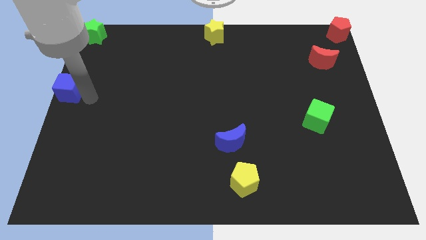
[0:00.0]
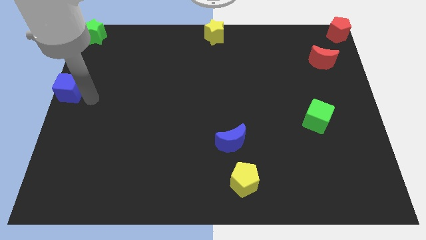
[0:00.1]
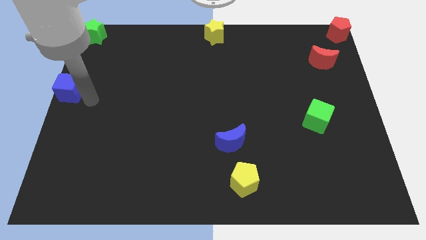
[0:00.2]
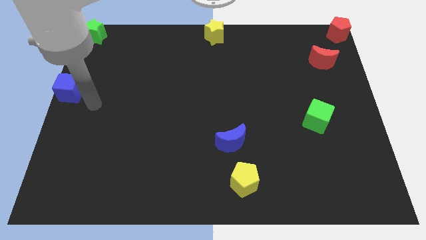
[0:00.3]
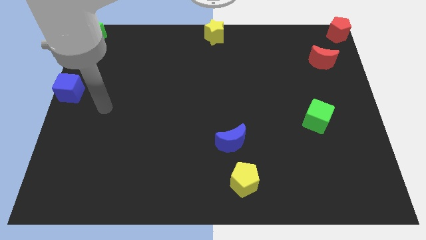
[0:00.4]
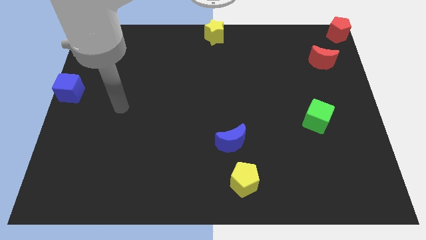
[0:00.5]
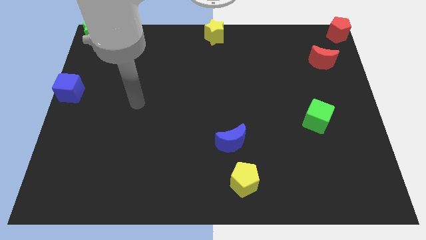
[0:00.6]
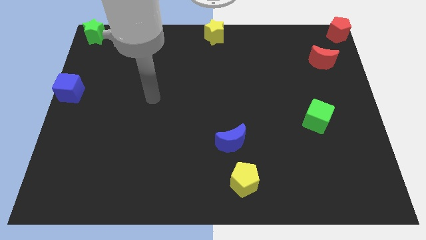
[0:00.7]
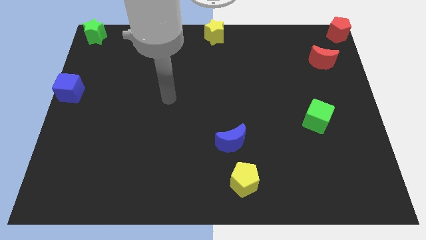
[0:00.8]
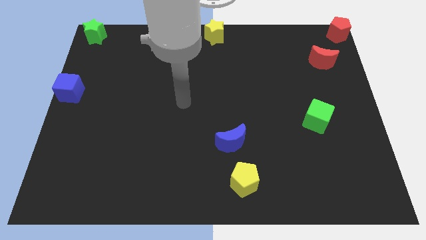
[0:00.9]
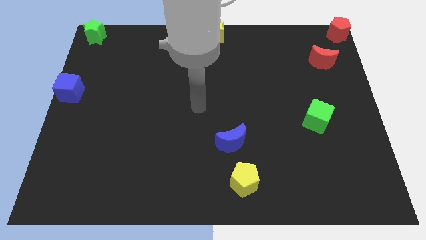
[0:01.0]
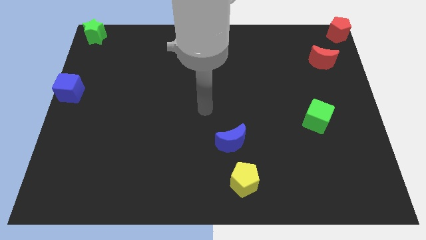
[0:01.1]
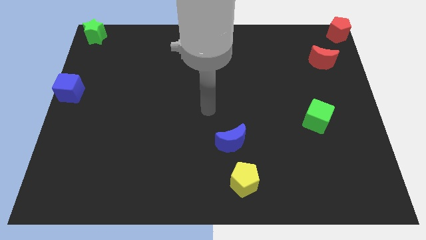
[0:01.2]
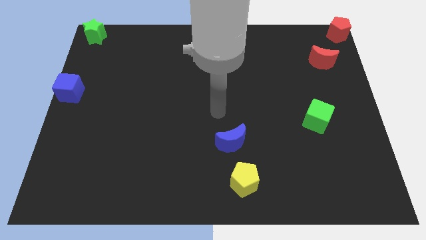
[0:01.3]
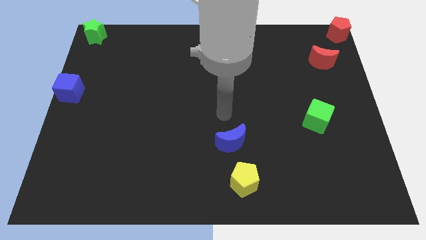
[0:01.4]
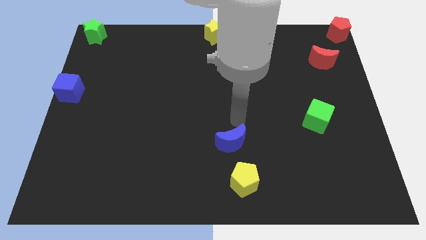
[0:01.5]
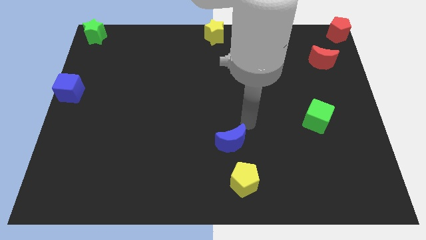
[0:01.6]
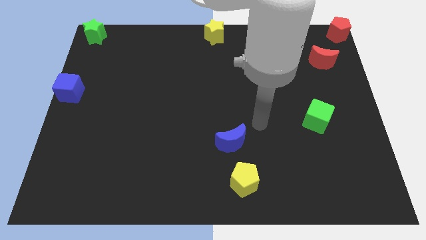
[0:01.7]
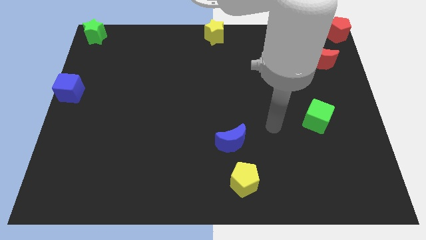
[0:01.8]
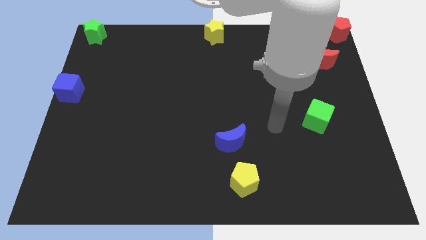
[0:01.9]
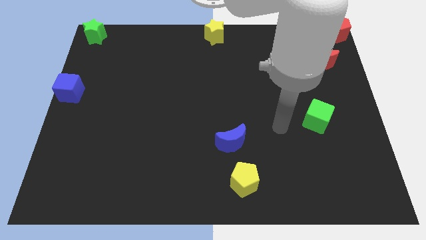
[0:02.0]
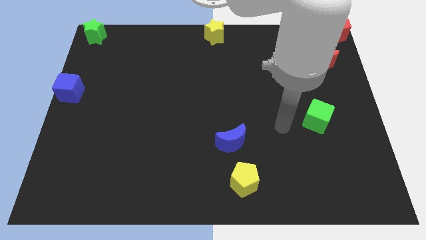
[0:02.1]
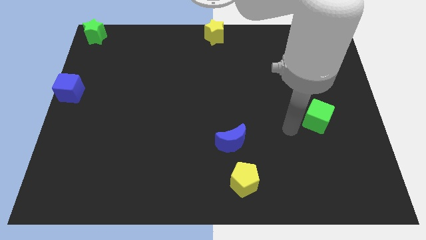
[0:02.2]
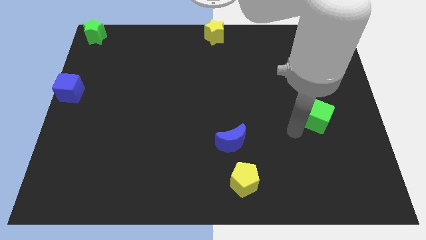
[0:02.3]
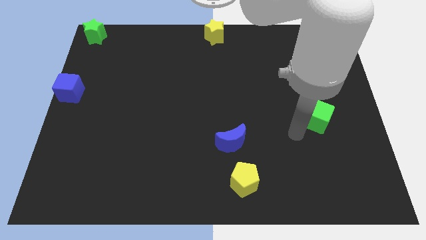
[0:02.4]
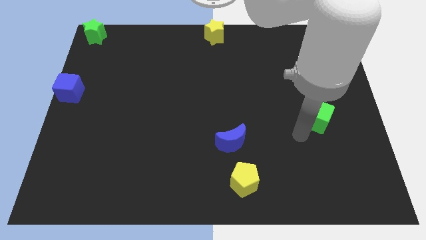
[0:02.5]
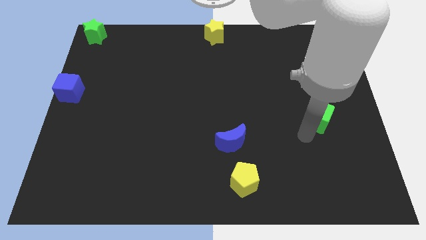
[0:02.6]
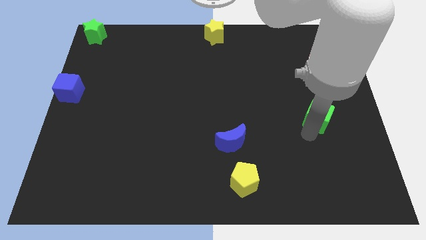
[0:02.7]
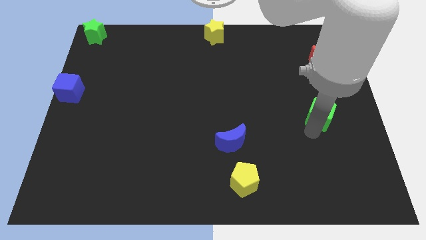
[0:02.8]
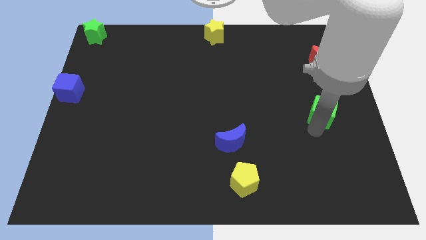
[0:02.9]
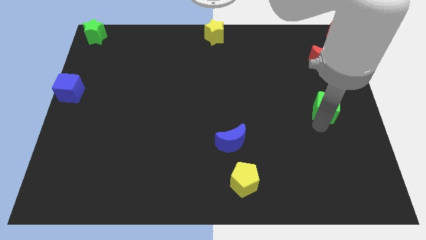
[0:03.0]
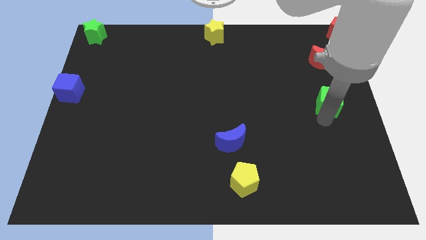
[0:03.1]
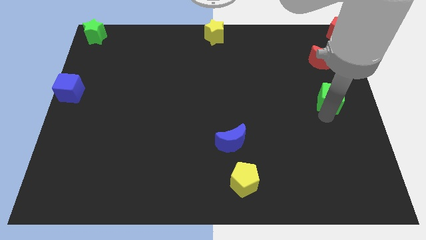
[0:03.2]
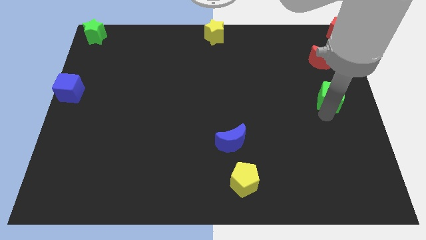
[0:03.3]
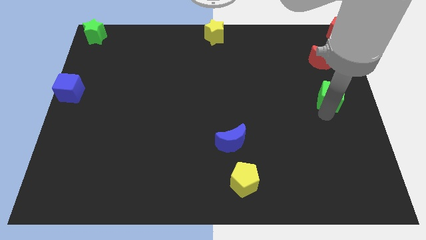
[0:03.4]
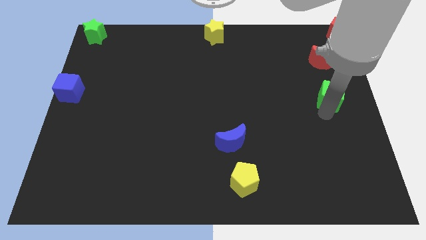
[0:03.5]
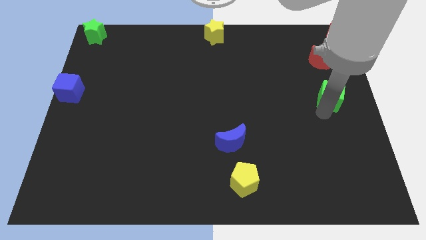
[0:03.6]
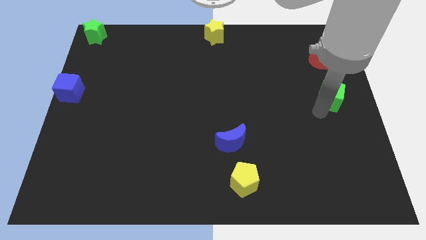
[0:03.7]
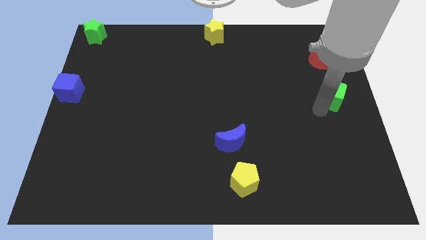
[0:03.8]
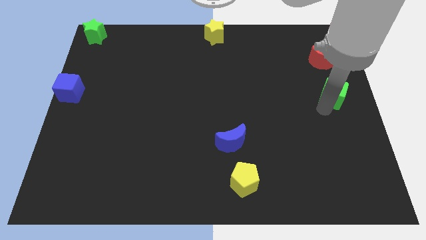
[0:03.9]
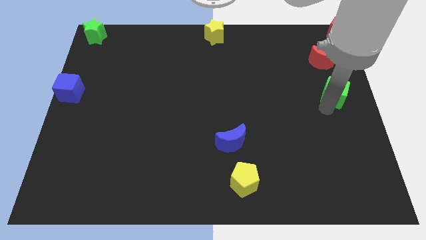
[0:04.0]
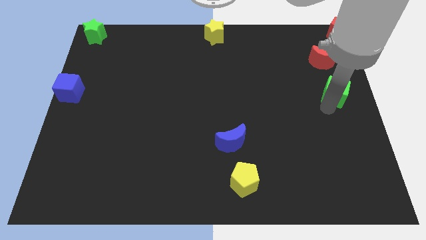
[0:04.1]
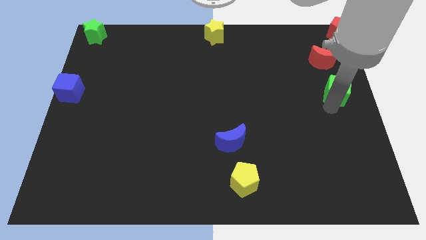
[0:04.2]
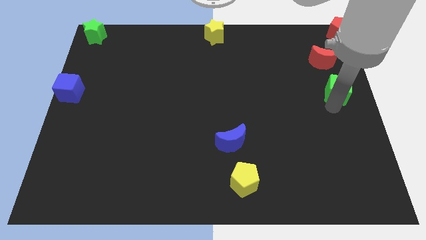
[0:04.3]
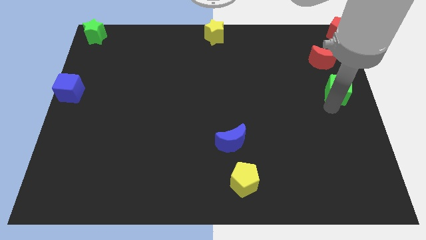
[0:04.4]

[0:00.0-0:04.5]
slide the green cube towards the bottom side of the red moon

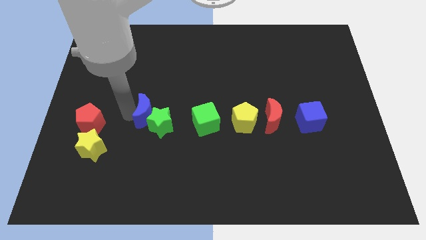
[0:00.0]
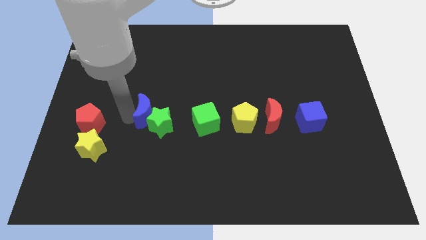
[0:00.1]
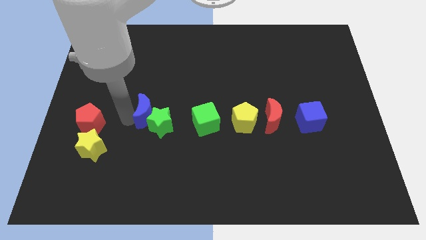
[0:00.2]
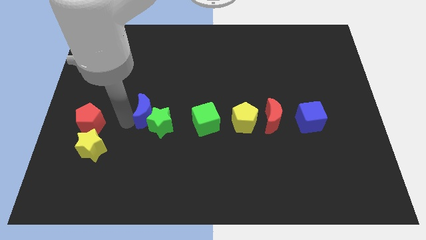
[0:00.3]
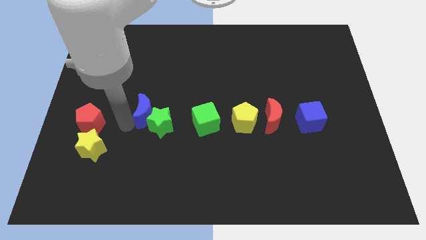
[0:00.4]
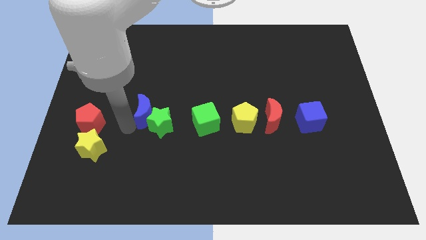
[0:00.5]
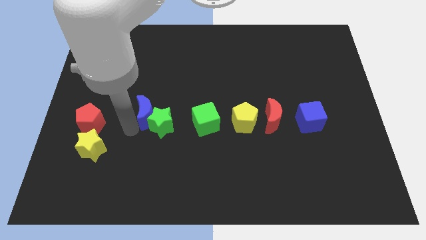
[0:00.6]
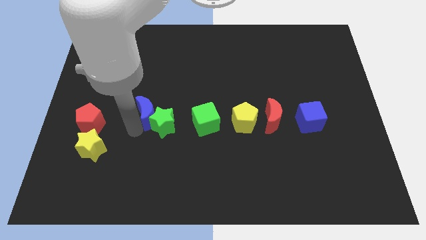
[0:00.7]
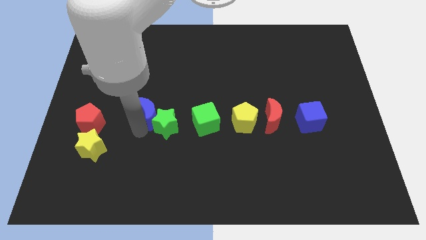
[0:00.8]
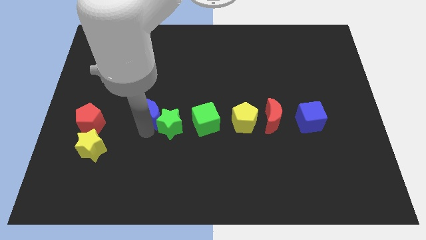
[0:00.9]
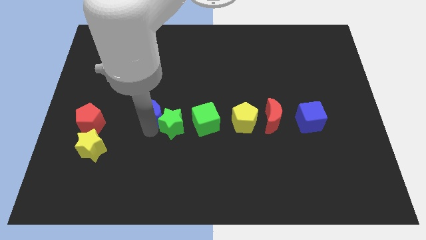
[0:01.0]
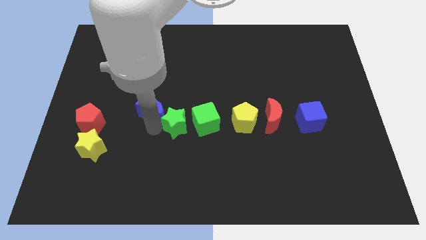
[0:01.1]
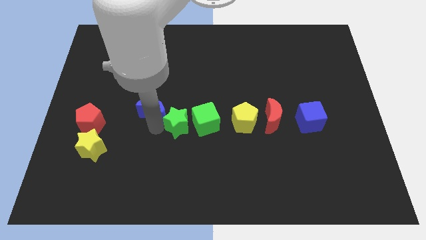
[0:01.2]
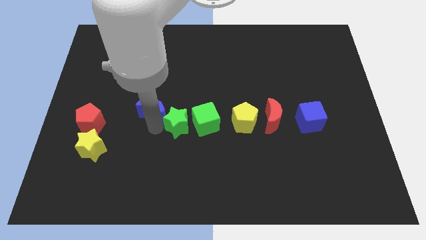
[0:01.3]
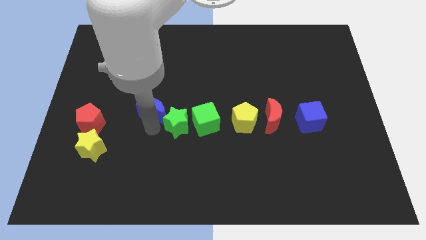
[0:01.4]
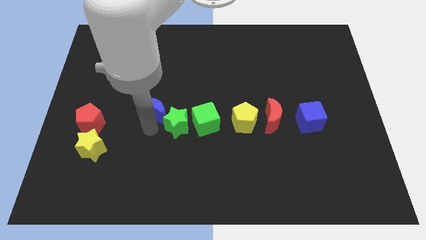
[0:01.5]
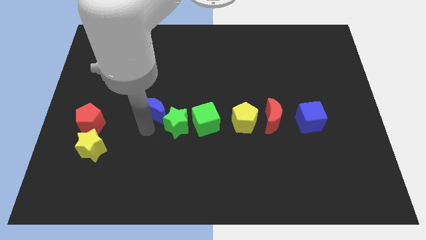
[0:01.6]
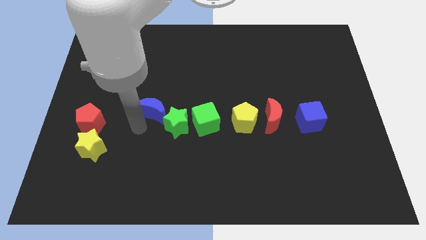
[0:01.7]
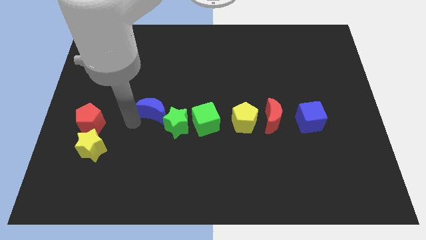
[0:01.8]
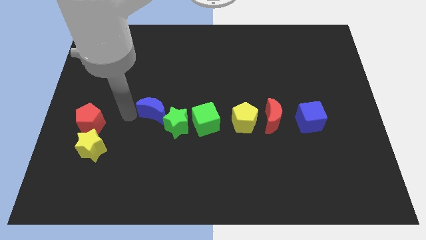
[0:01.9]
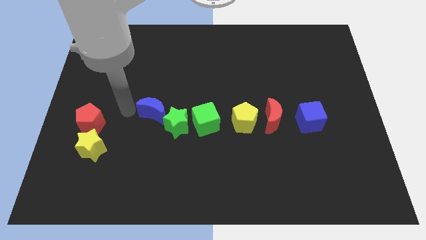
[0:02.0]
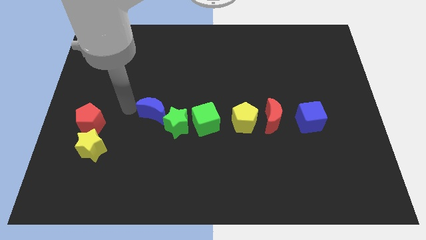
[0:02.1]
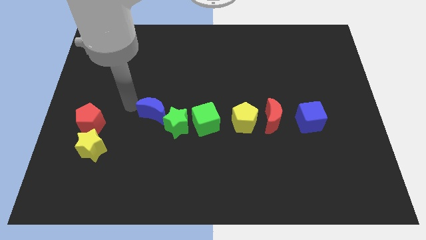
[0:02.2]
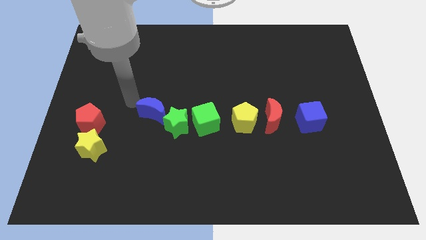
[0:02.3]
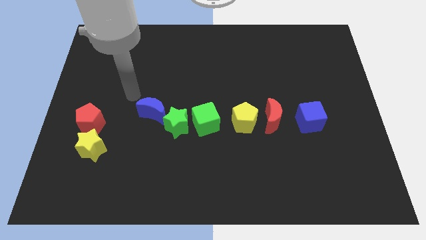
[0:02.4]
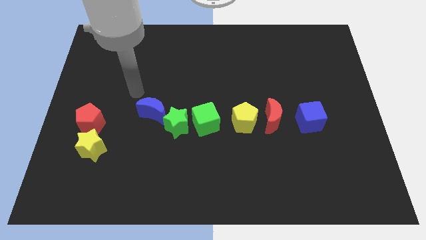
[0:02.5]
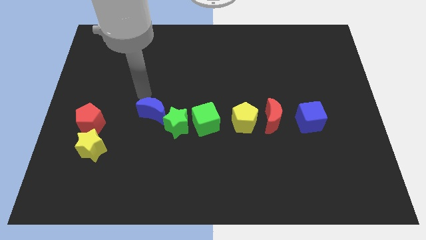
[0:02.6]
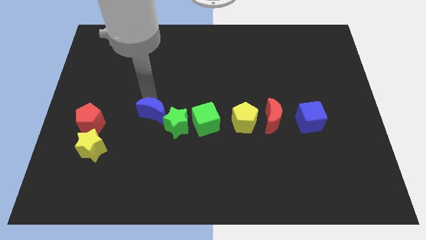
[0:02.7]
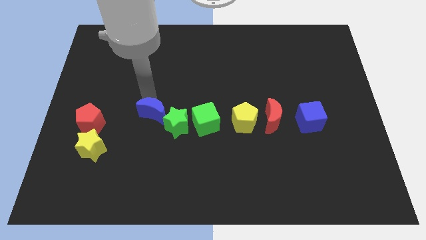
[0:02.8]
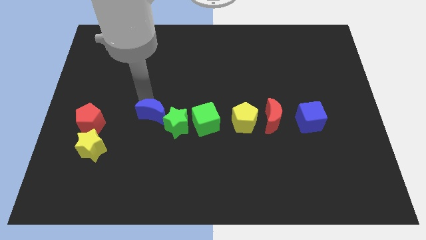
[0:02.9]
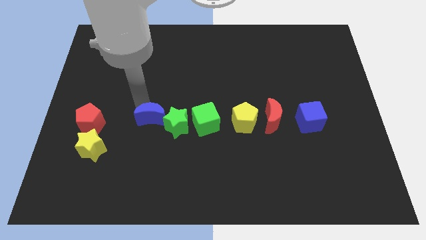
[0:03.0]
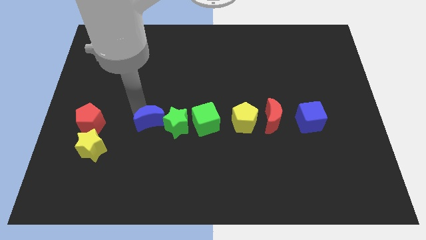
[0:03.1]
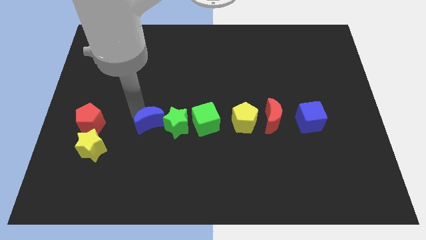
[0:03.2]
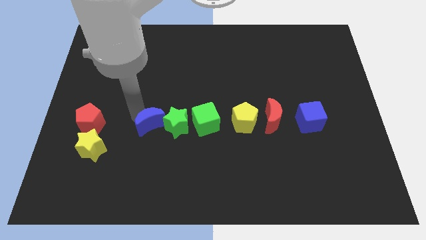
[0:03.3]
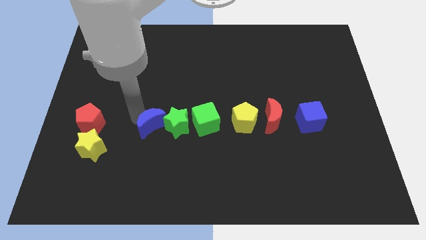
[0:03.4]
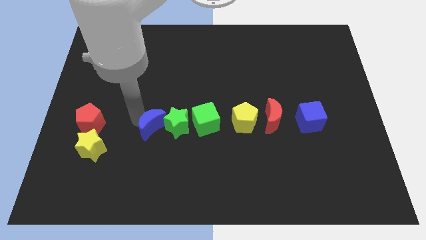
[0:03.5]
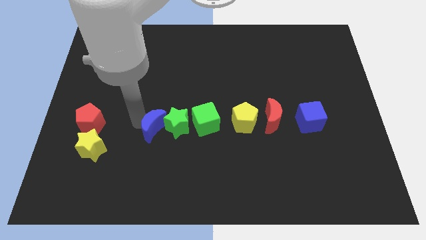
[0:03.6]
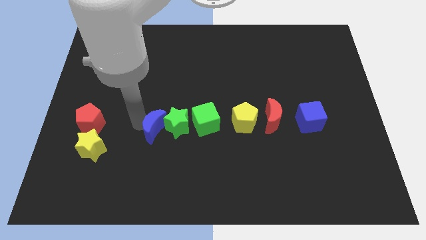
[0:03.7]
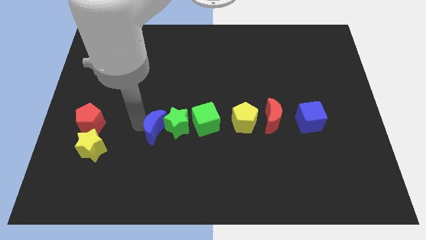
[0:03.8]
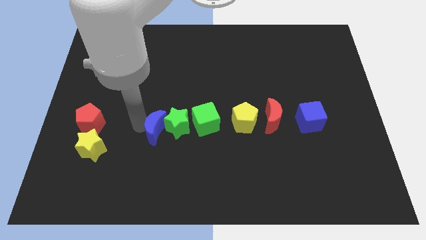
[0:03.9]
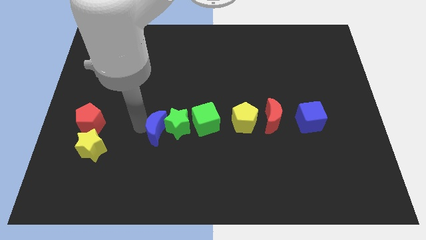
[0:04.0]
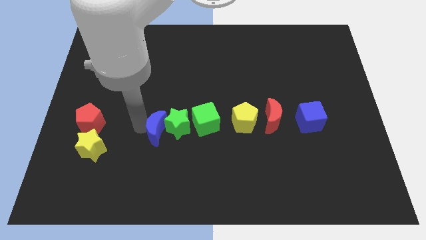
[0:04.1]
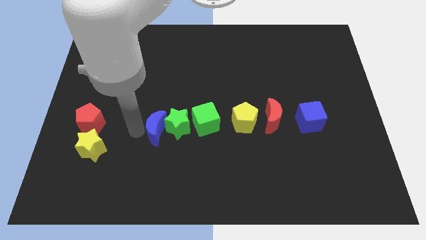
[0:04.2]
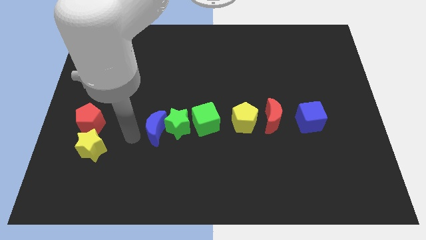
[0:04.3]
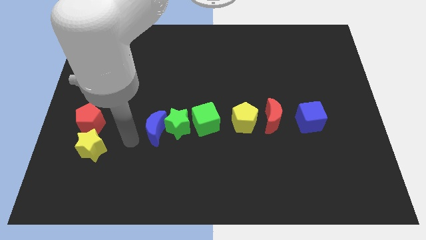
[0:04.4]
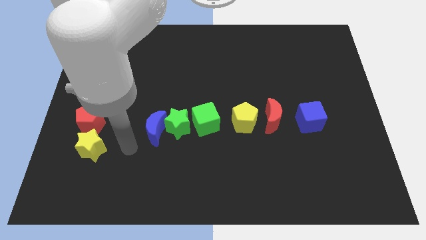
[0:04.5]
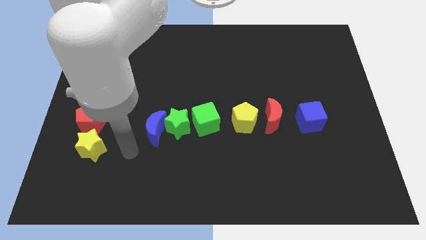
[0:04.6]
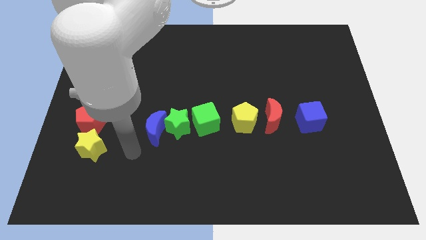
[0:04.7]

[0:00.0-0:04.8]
adjust the green star and blue crescent to form a horizontal line with group of blocks
